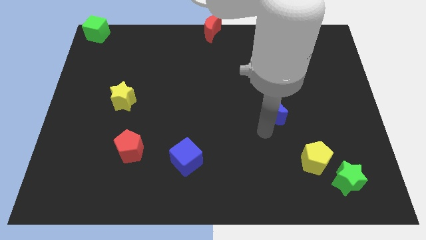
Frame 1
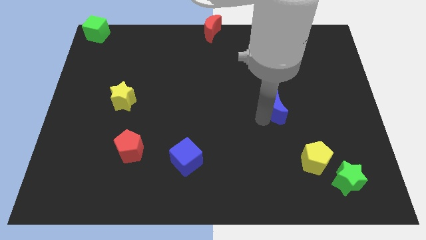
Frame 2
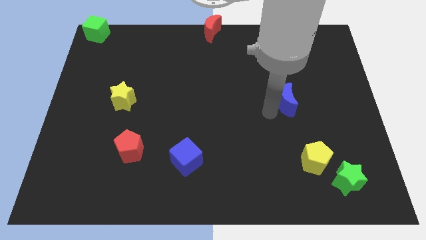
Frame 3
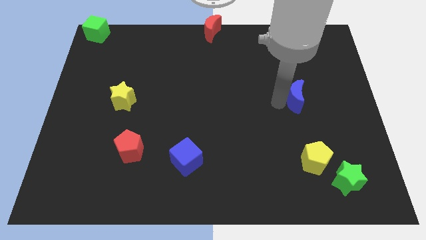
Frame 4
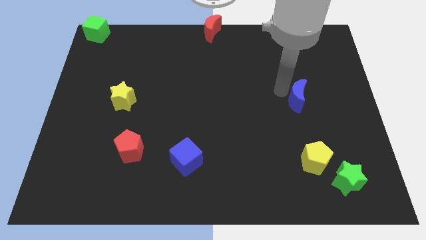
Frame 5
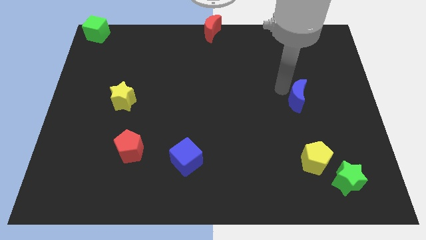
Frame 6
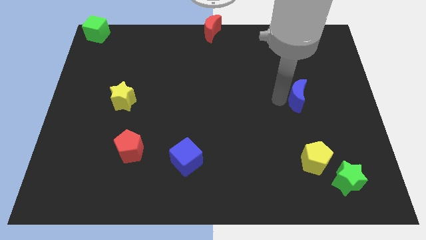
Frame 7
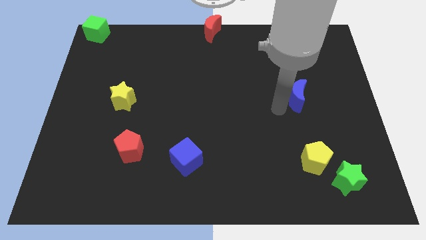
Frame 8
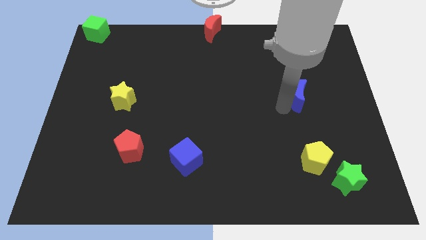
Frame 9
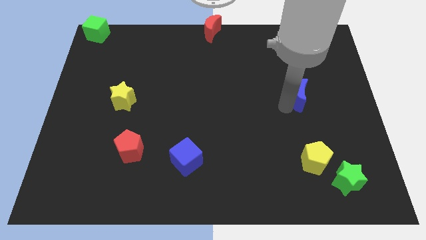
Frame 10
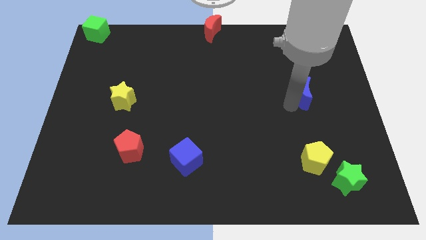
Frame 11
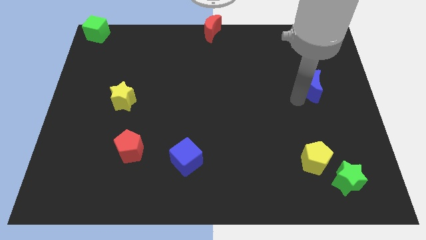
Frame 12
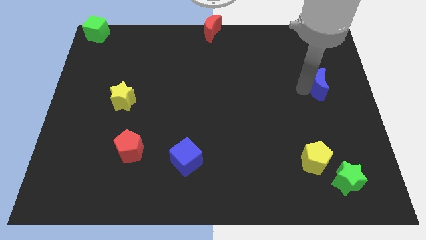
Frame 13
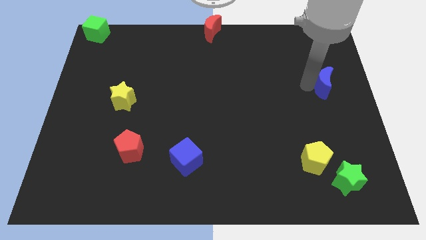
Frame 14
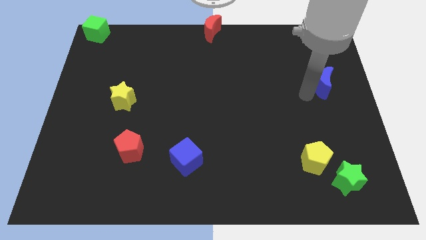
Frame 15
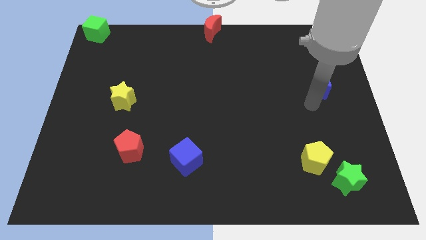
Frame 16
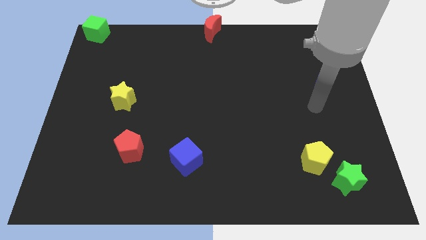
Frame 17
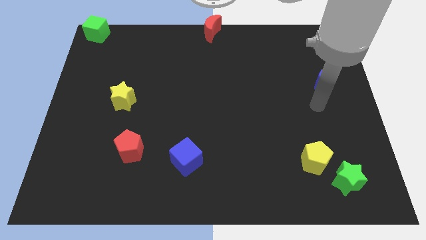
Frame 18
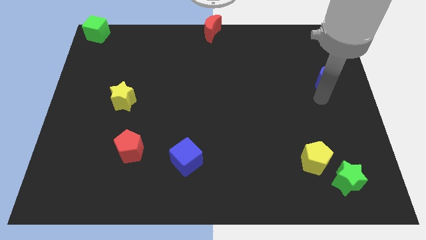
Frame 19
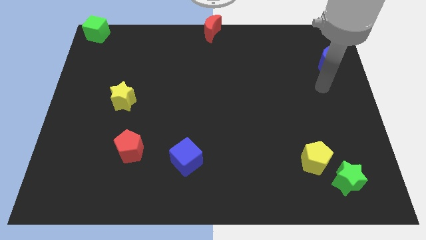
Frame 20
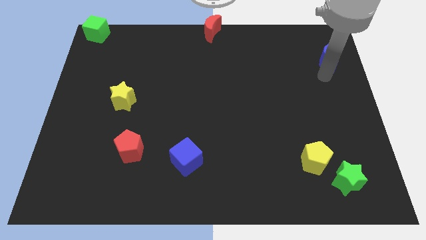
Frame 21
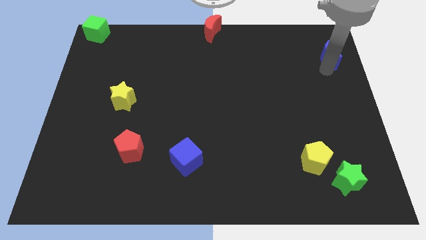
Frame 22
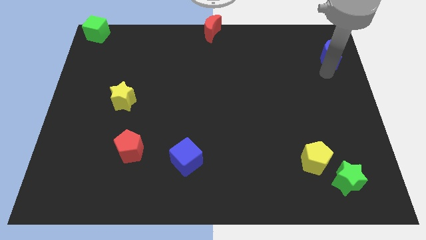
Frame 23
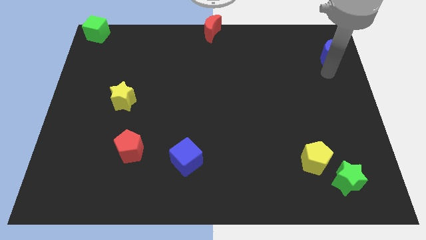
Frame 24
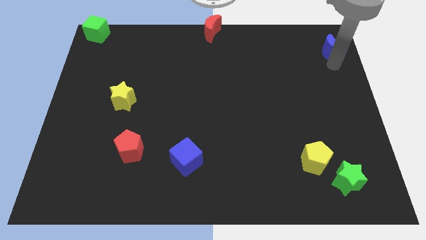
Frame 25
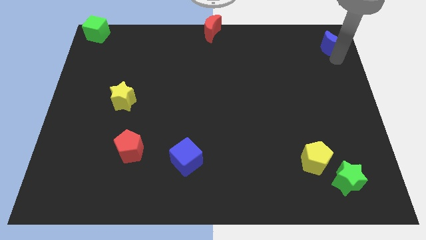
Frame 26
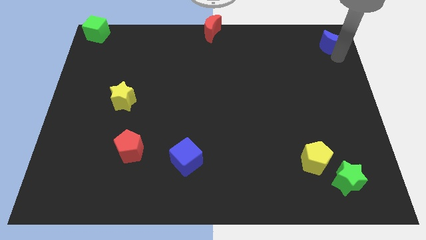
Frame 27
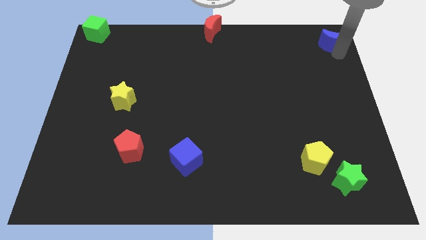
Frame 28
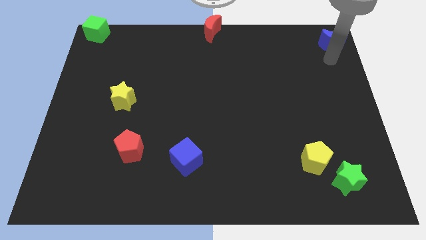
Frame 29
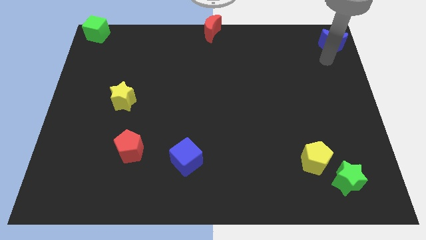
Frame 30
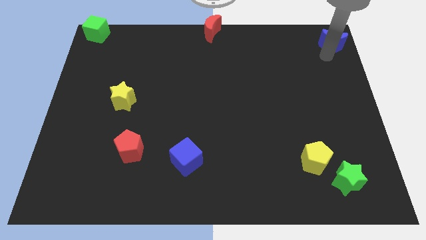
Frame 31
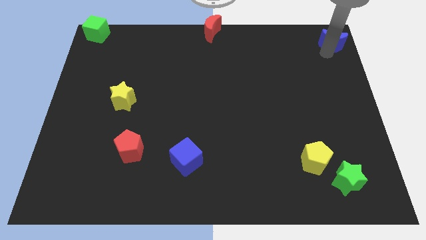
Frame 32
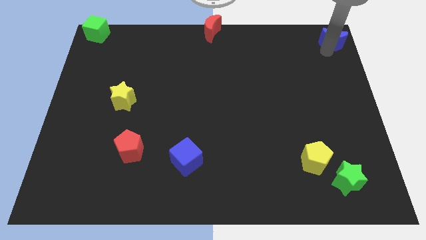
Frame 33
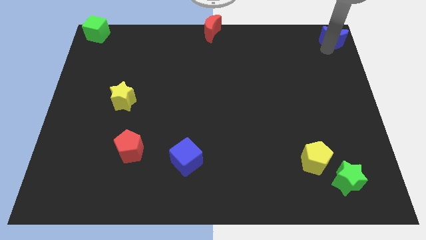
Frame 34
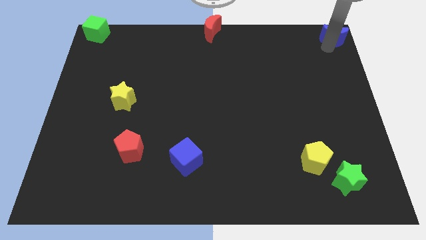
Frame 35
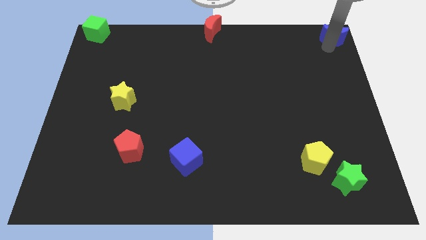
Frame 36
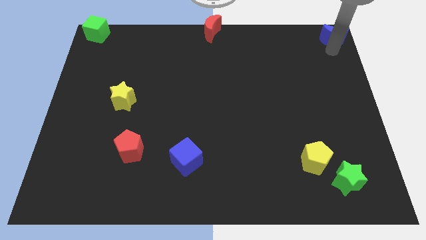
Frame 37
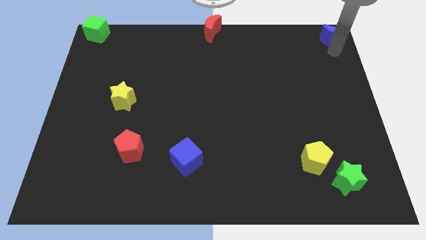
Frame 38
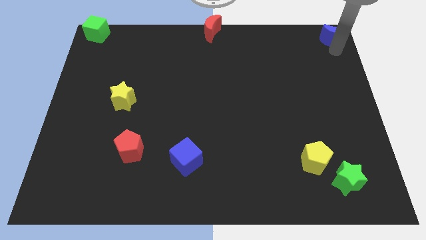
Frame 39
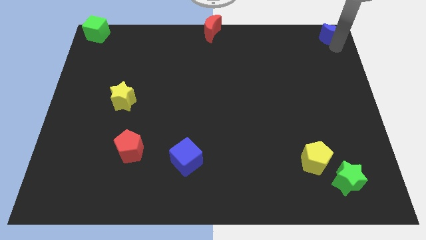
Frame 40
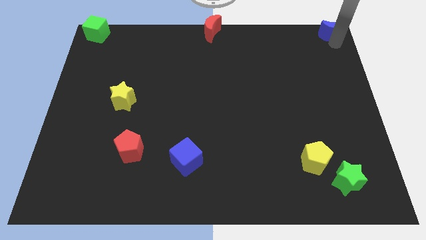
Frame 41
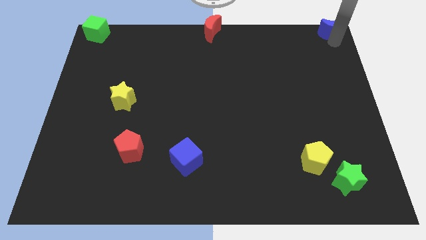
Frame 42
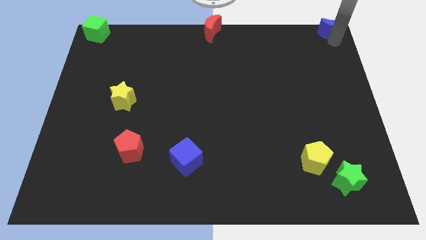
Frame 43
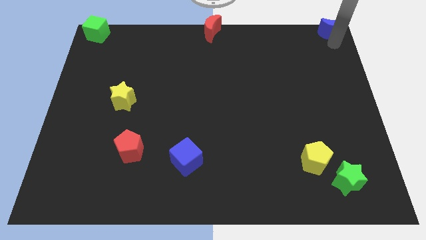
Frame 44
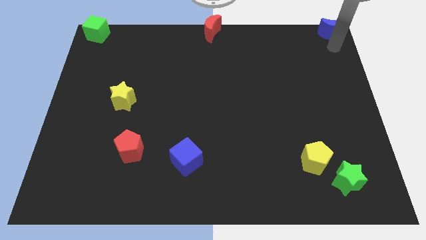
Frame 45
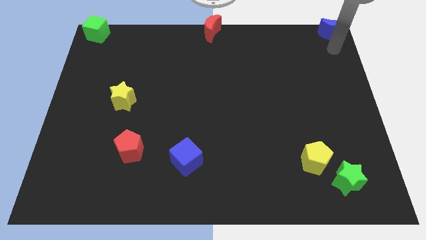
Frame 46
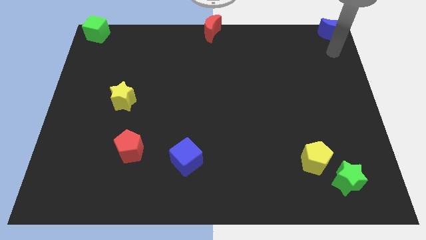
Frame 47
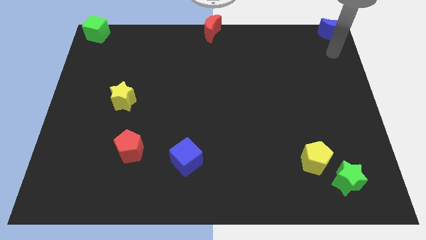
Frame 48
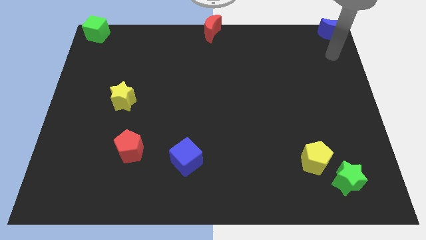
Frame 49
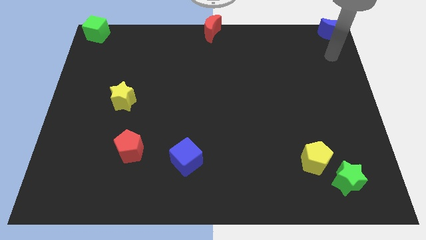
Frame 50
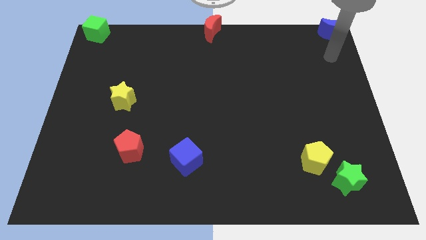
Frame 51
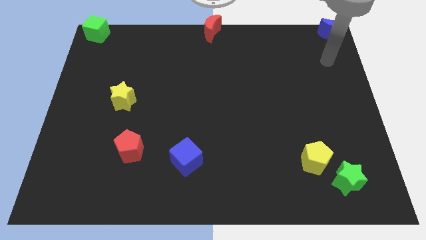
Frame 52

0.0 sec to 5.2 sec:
move the blue crescent to the top right corner

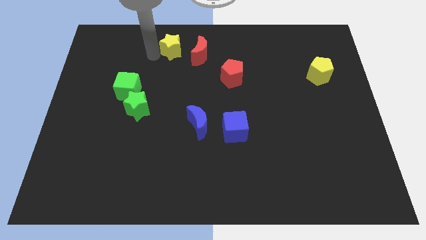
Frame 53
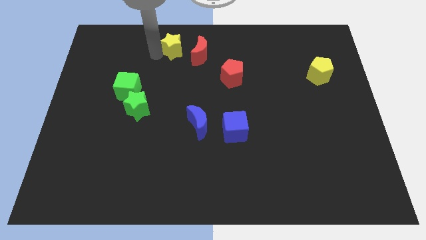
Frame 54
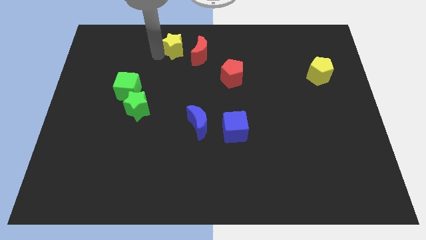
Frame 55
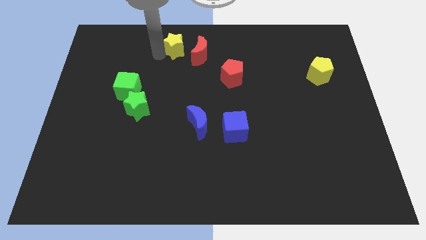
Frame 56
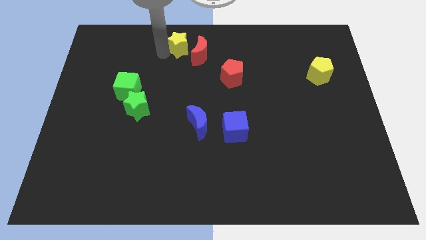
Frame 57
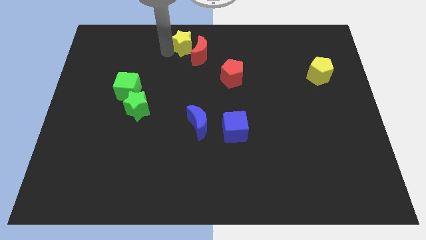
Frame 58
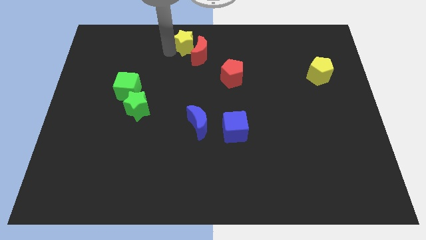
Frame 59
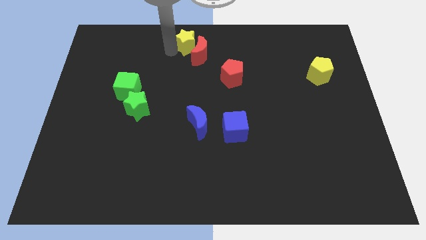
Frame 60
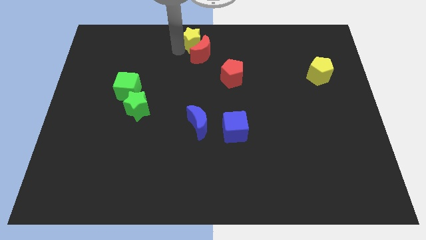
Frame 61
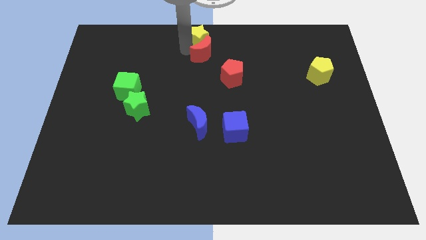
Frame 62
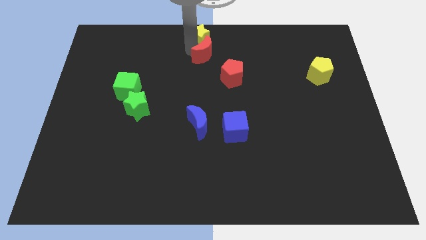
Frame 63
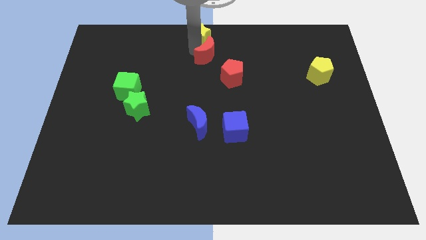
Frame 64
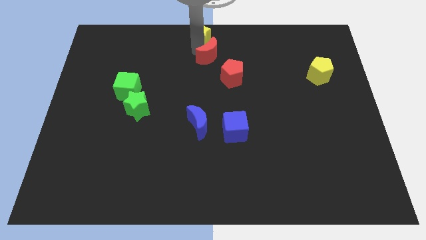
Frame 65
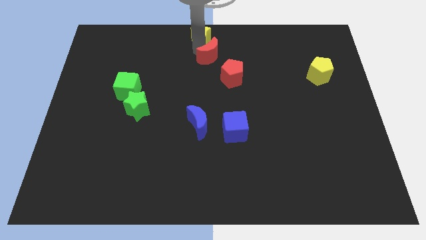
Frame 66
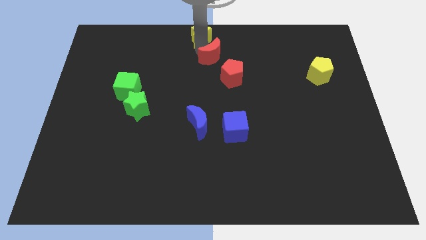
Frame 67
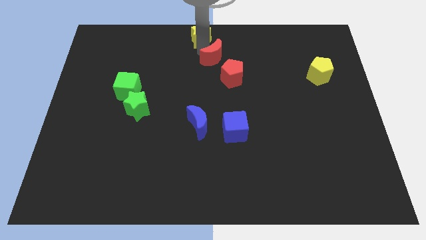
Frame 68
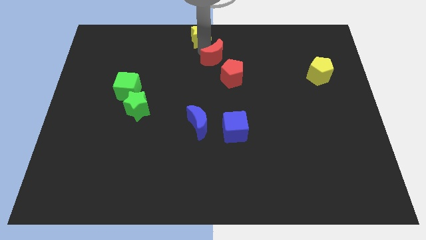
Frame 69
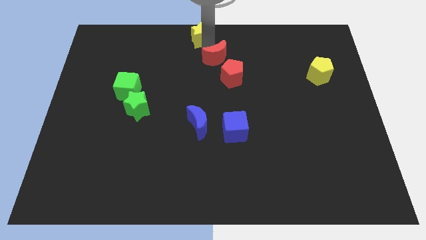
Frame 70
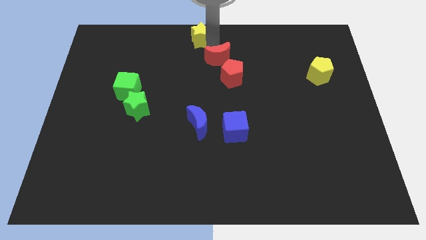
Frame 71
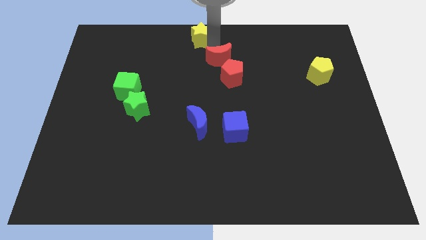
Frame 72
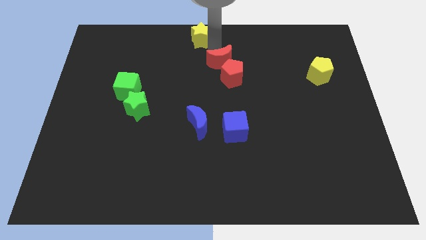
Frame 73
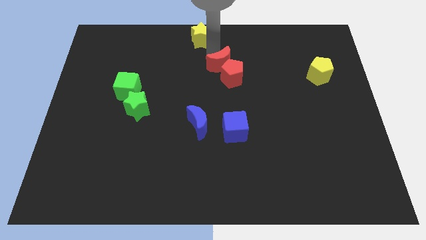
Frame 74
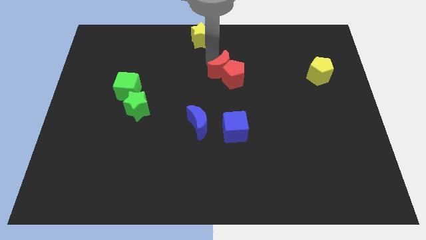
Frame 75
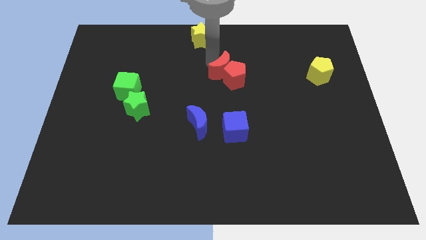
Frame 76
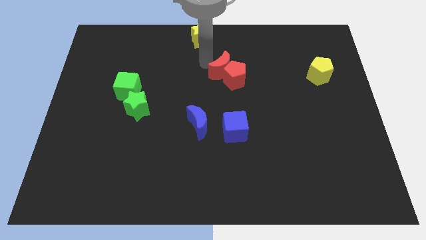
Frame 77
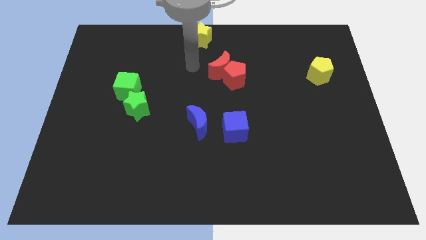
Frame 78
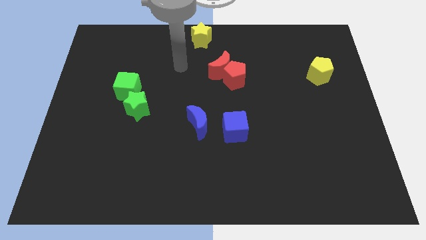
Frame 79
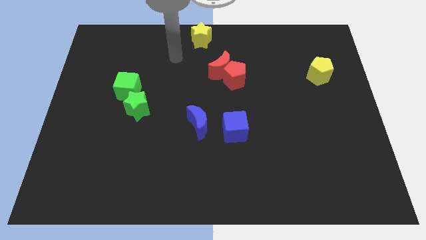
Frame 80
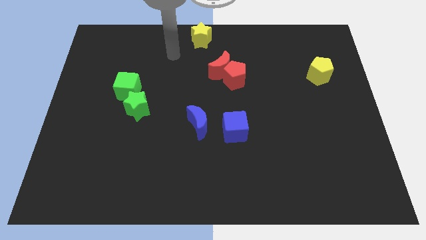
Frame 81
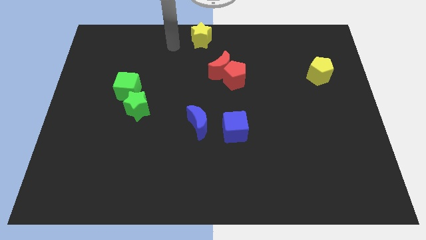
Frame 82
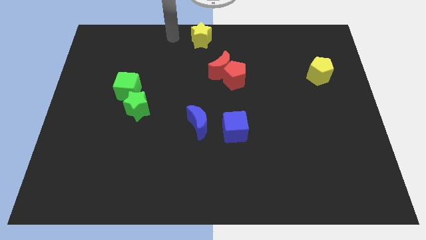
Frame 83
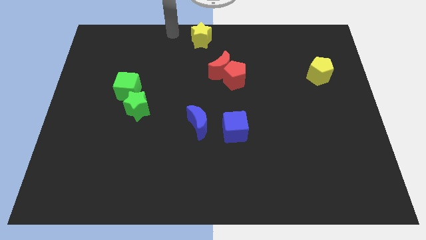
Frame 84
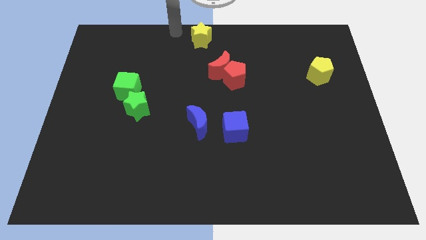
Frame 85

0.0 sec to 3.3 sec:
move the red crescent on top left of the red pentagon

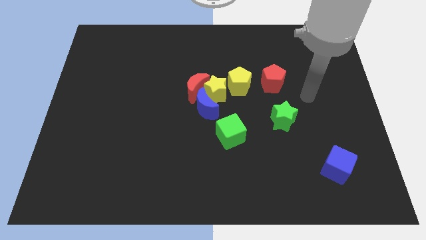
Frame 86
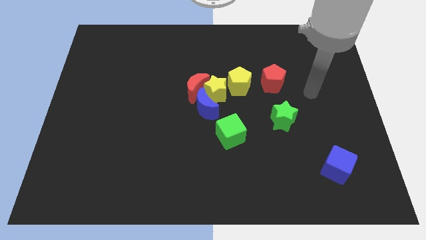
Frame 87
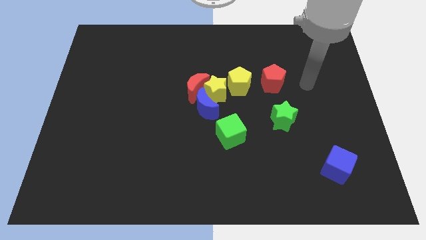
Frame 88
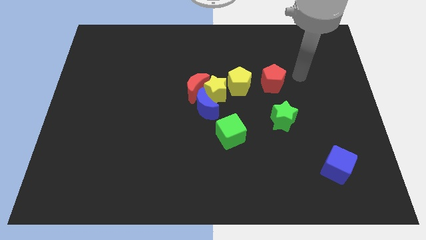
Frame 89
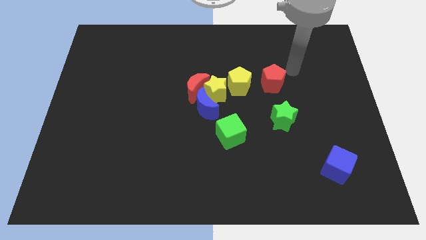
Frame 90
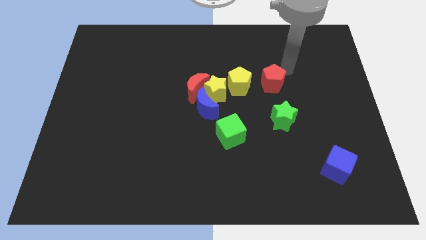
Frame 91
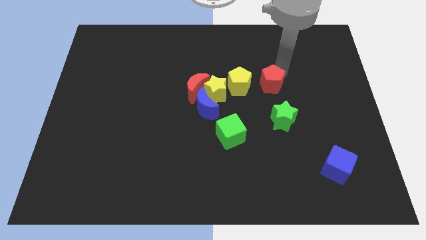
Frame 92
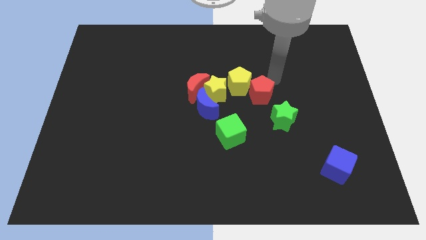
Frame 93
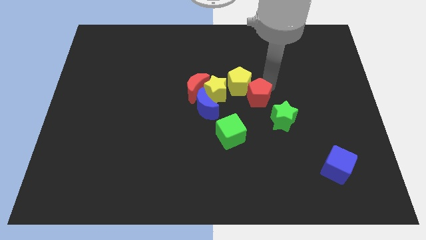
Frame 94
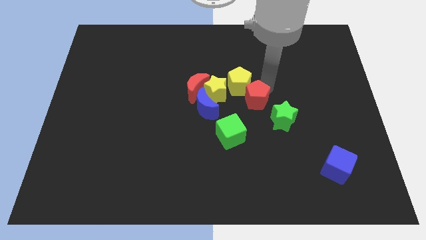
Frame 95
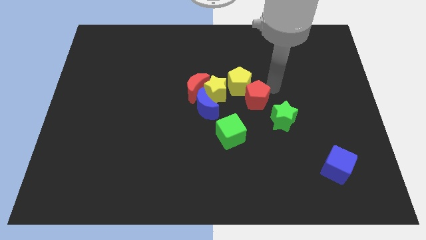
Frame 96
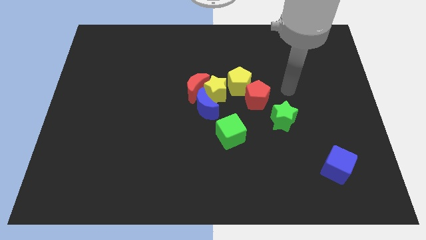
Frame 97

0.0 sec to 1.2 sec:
put the red pentagon to the bottom right to the yellow pentagon
